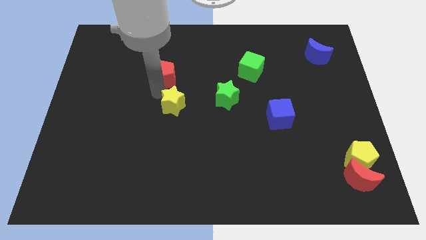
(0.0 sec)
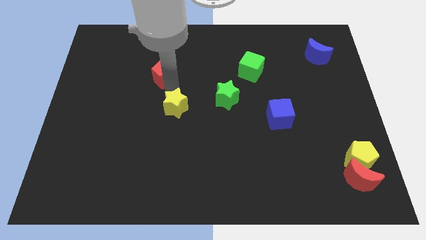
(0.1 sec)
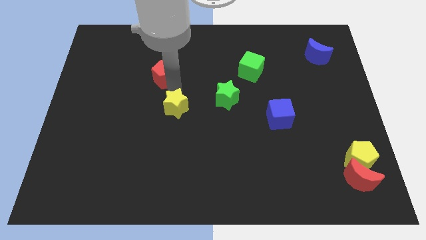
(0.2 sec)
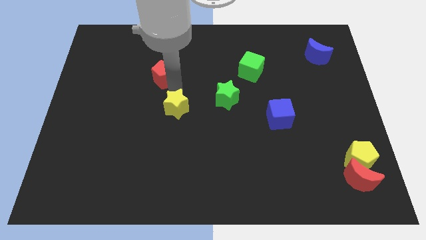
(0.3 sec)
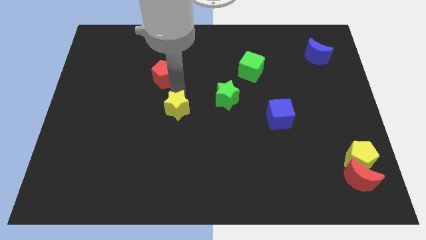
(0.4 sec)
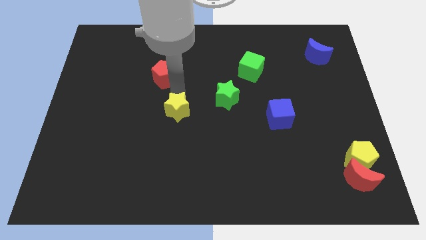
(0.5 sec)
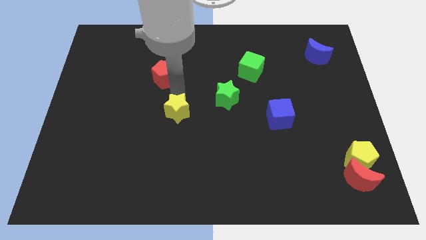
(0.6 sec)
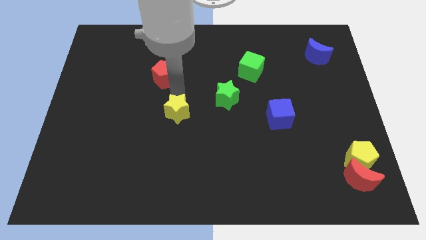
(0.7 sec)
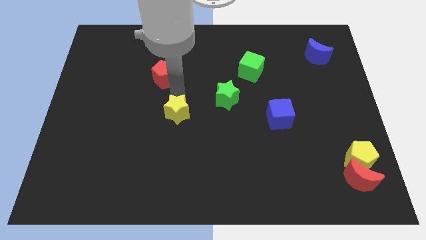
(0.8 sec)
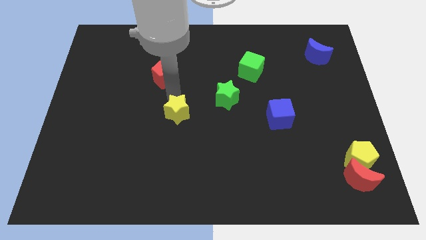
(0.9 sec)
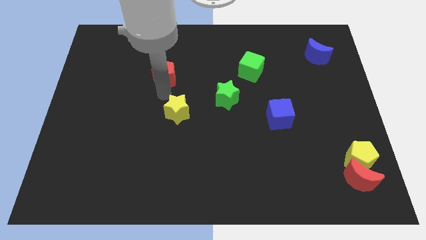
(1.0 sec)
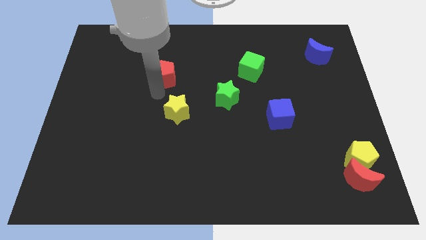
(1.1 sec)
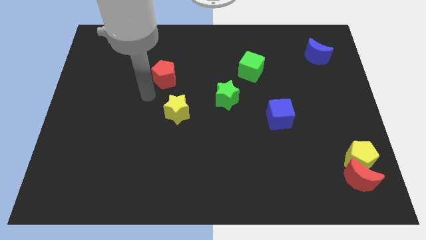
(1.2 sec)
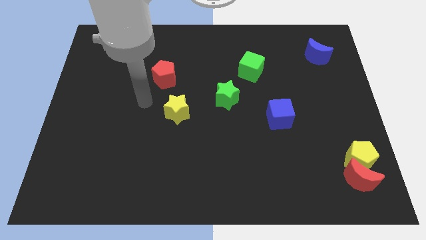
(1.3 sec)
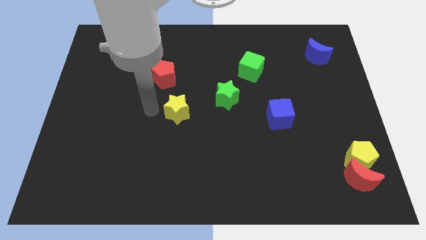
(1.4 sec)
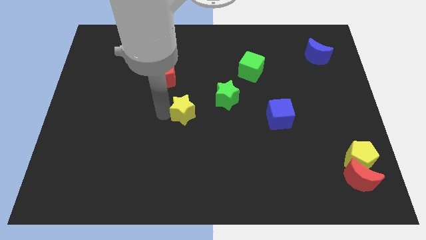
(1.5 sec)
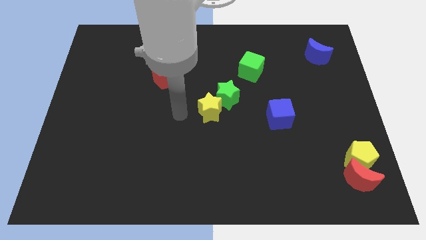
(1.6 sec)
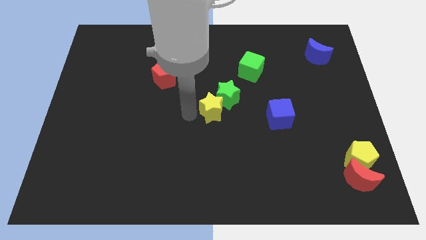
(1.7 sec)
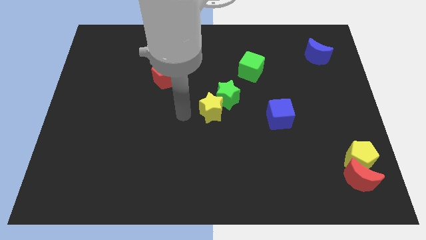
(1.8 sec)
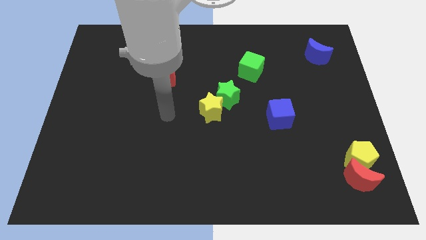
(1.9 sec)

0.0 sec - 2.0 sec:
push the yellow star to the left of green star

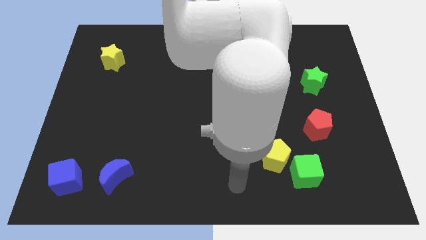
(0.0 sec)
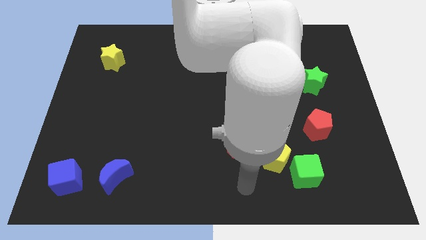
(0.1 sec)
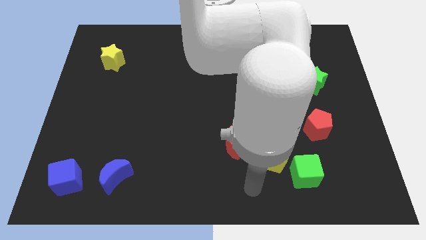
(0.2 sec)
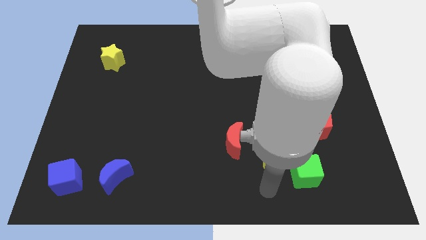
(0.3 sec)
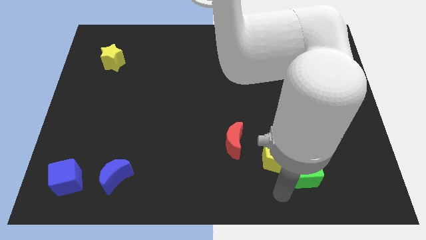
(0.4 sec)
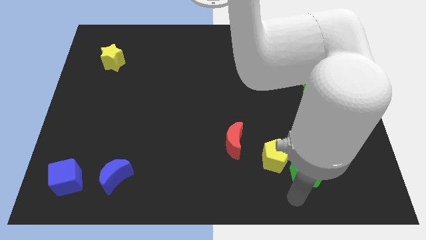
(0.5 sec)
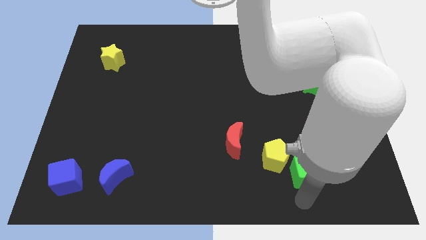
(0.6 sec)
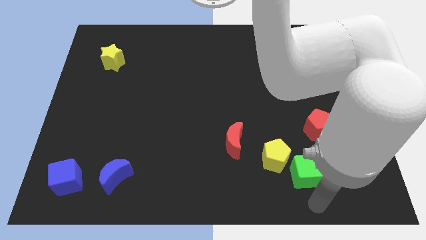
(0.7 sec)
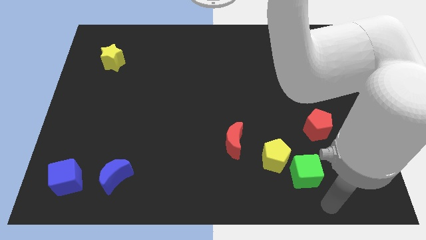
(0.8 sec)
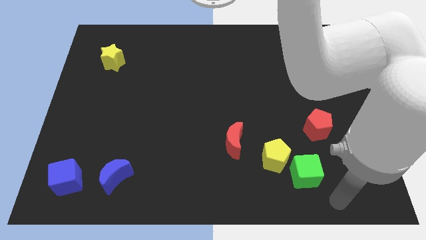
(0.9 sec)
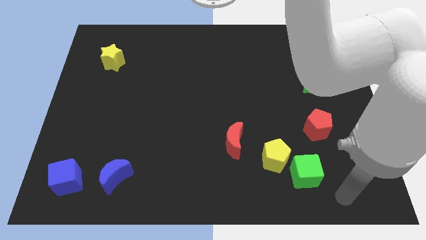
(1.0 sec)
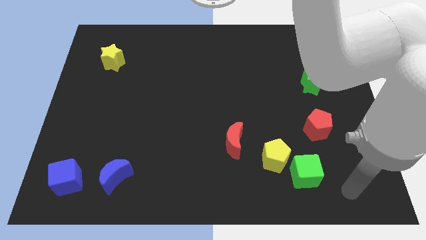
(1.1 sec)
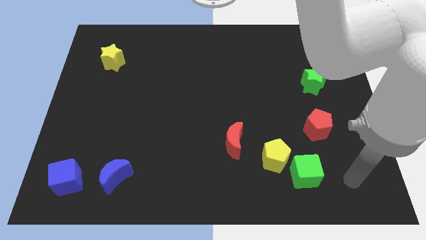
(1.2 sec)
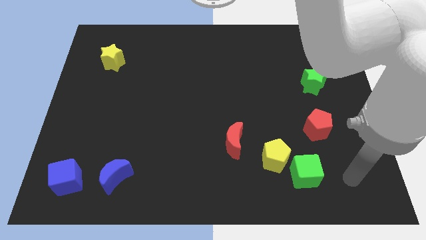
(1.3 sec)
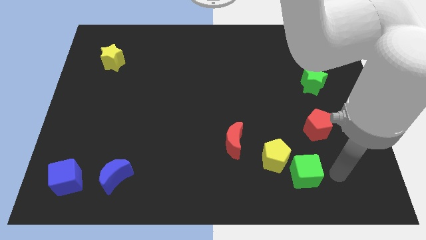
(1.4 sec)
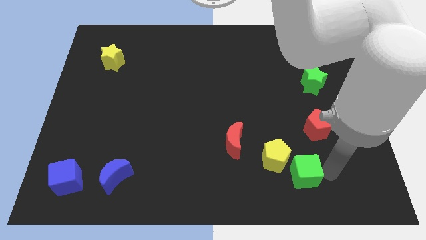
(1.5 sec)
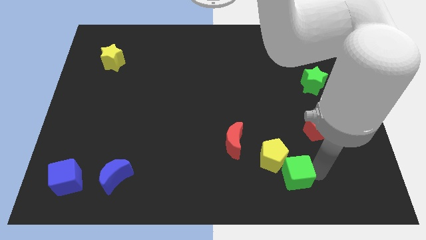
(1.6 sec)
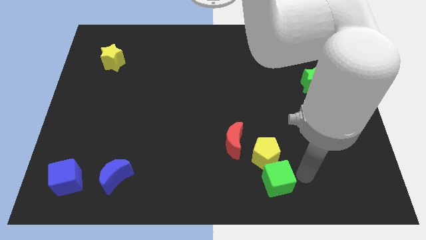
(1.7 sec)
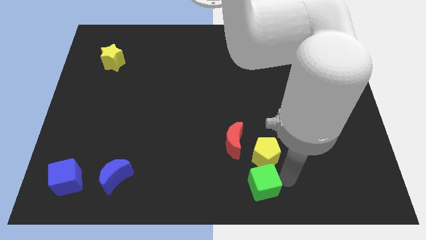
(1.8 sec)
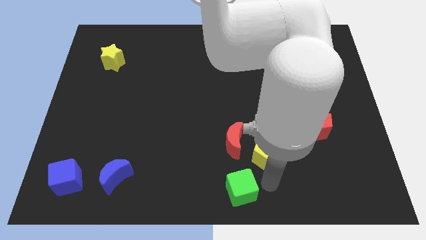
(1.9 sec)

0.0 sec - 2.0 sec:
move green cube below red moon

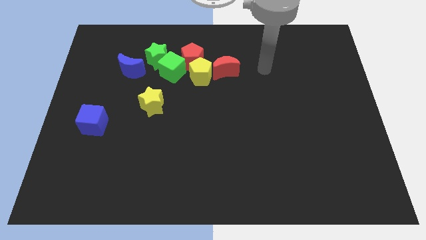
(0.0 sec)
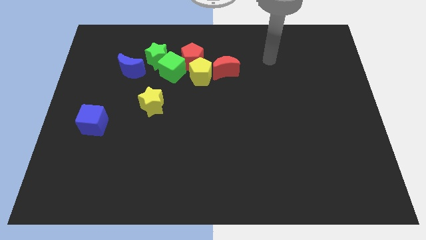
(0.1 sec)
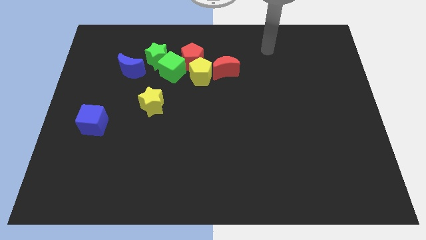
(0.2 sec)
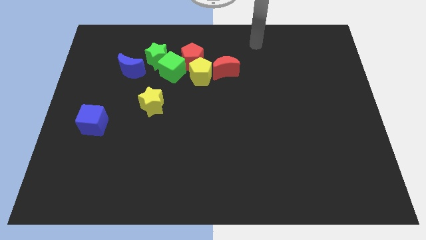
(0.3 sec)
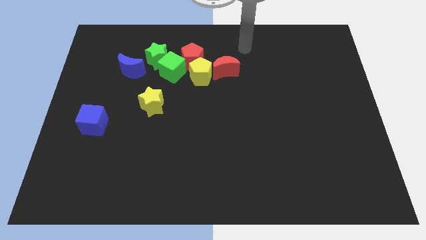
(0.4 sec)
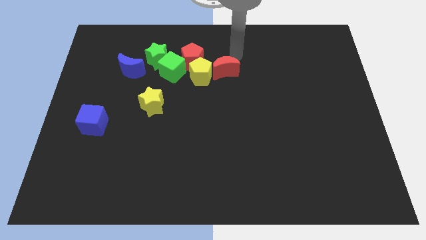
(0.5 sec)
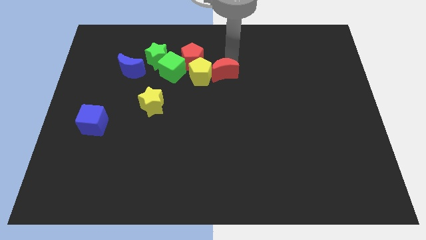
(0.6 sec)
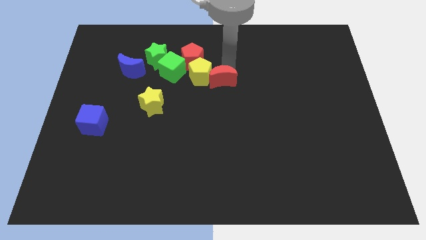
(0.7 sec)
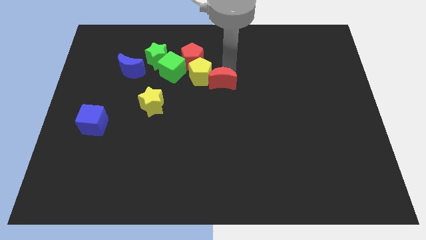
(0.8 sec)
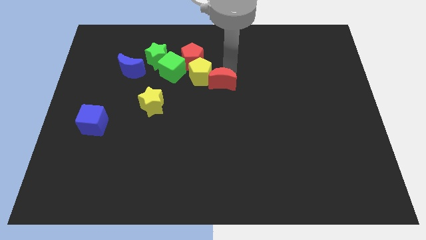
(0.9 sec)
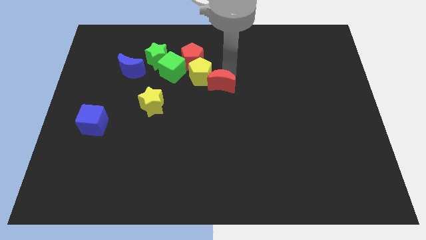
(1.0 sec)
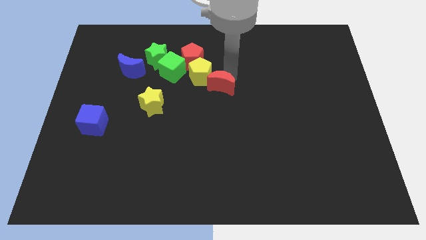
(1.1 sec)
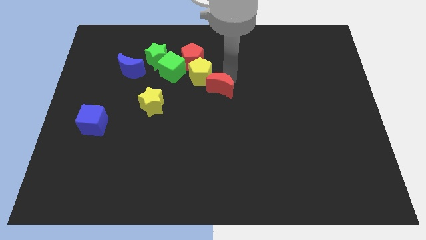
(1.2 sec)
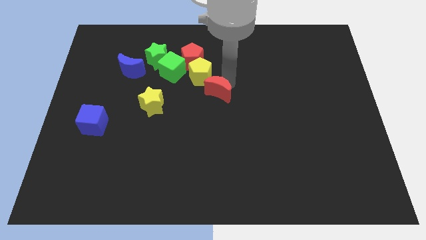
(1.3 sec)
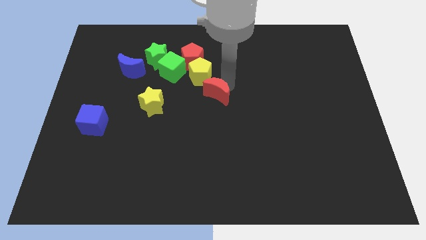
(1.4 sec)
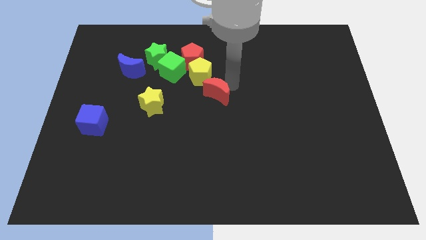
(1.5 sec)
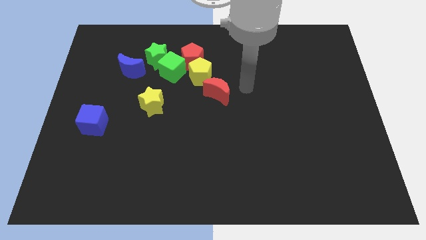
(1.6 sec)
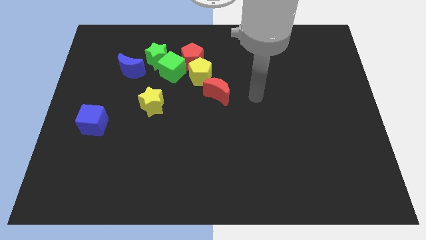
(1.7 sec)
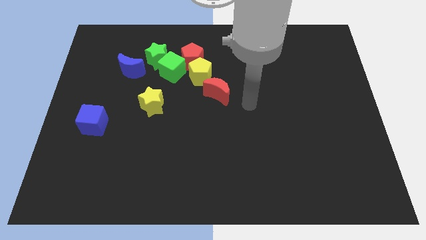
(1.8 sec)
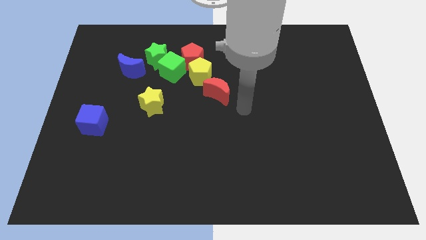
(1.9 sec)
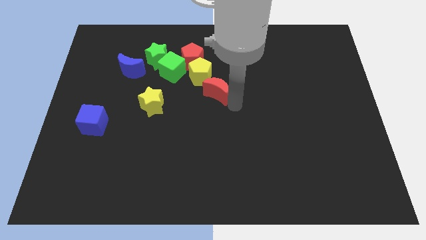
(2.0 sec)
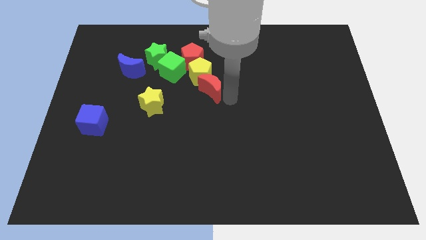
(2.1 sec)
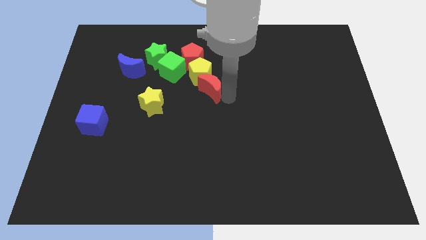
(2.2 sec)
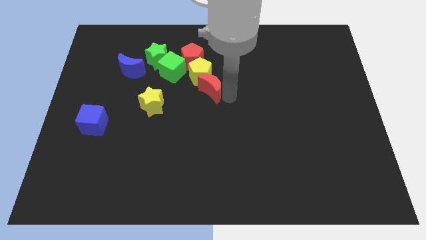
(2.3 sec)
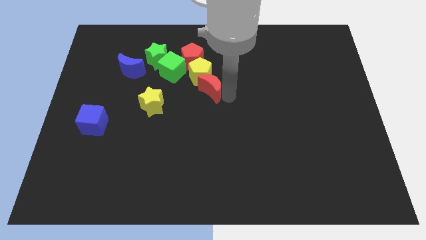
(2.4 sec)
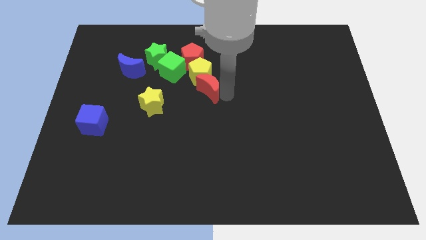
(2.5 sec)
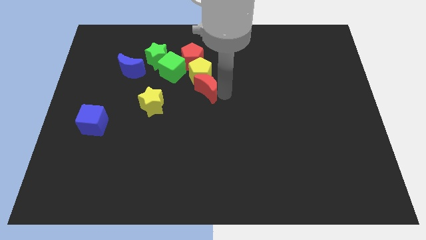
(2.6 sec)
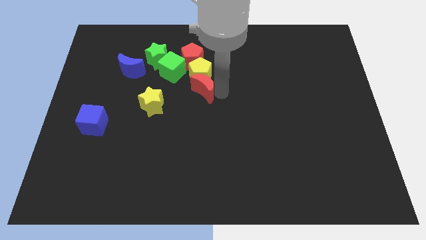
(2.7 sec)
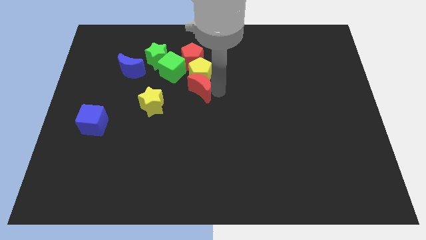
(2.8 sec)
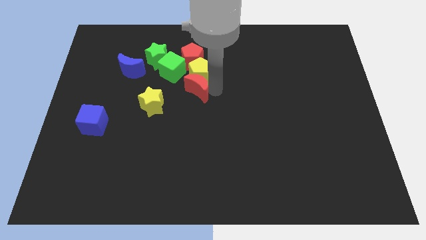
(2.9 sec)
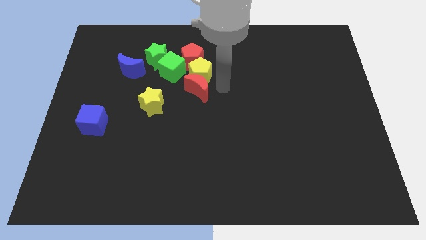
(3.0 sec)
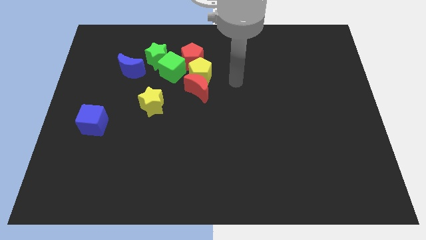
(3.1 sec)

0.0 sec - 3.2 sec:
push red moon into yellow pentagon

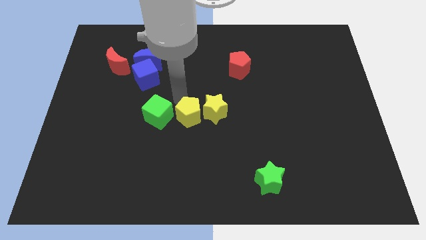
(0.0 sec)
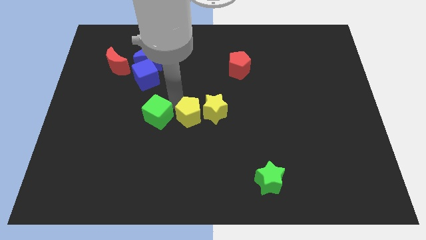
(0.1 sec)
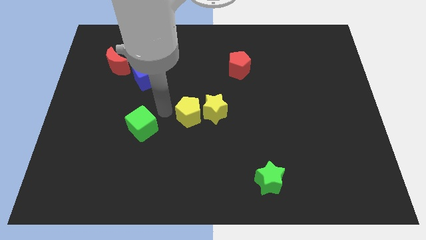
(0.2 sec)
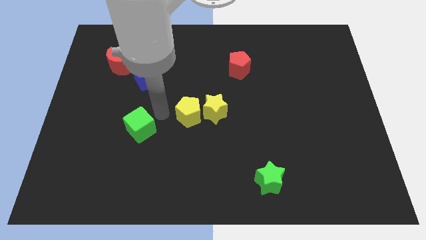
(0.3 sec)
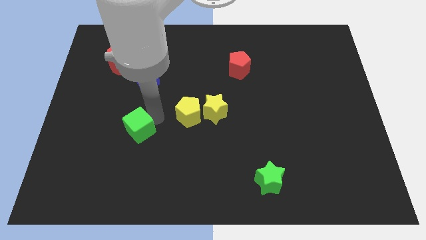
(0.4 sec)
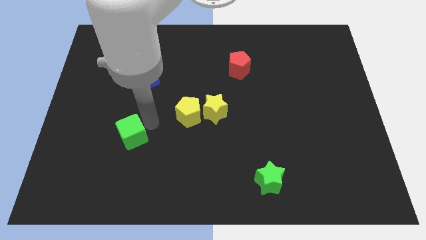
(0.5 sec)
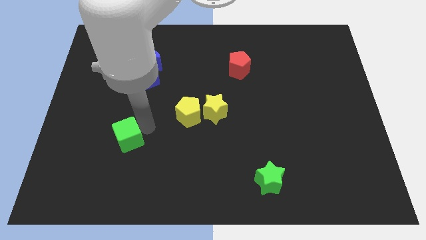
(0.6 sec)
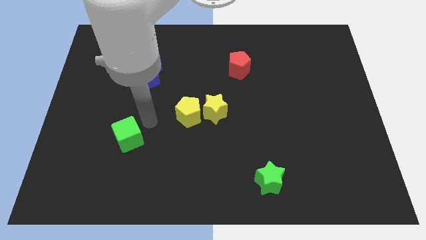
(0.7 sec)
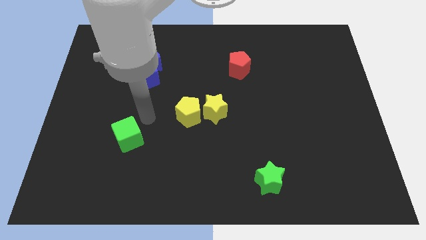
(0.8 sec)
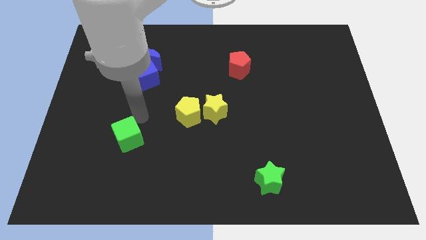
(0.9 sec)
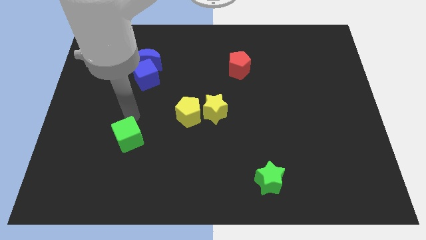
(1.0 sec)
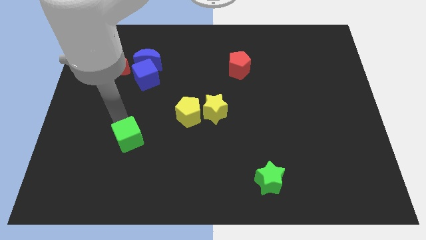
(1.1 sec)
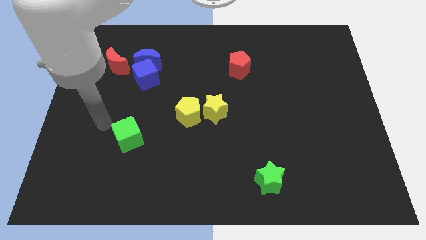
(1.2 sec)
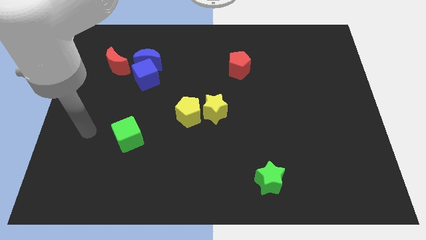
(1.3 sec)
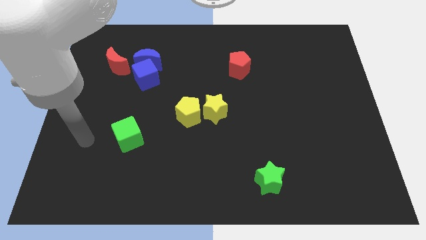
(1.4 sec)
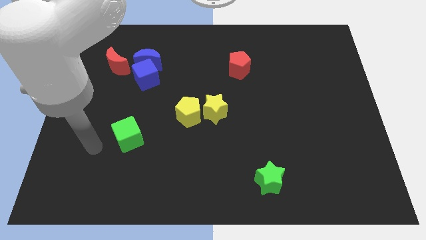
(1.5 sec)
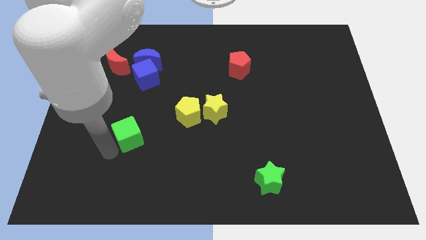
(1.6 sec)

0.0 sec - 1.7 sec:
move the green cube slightly towards the left bottom corner
